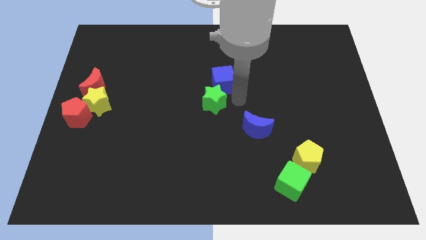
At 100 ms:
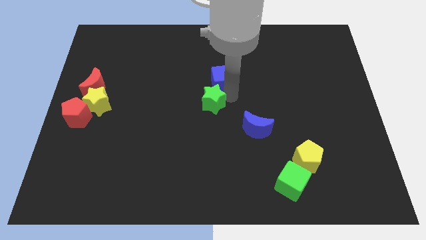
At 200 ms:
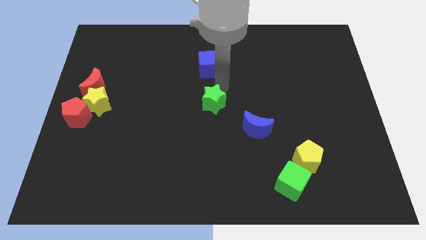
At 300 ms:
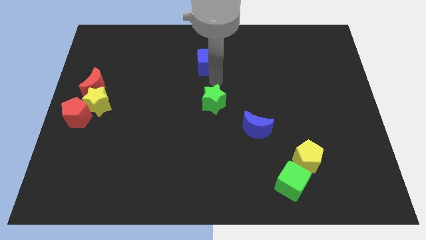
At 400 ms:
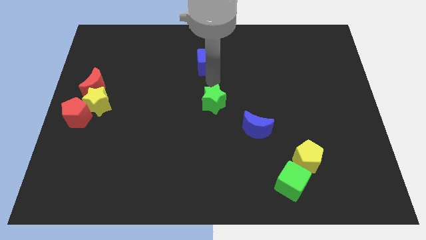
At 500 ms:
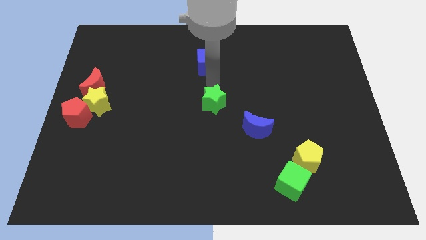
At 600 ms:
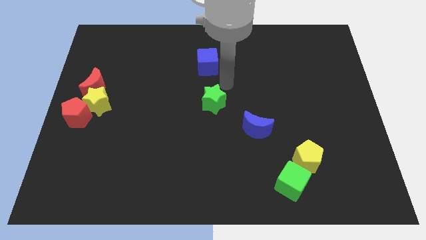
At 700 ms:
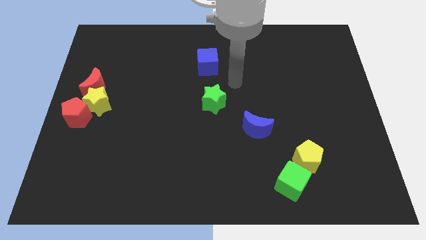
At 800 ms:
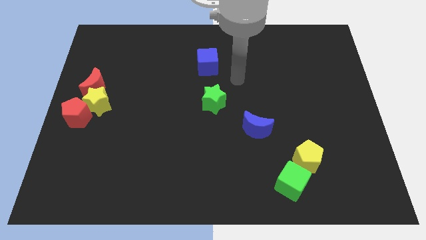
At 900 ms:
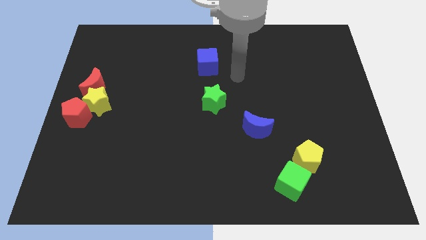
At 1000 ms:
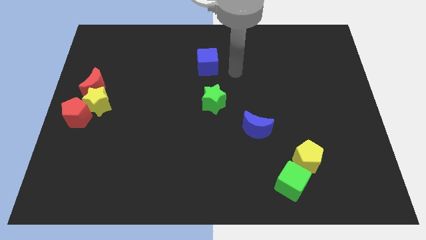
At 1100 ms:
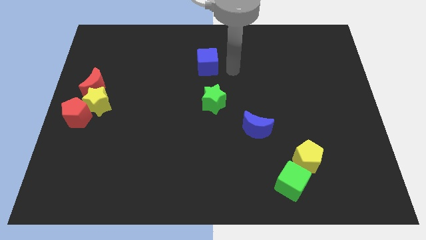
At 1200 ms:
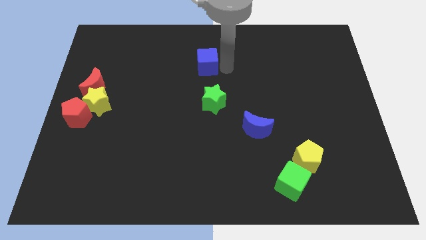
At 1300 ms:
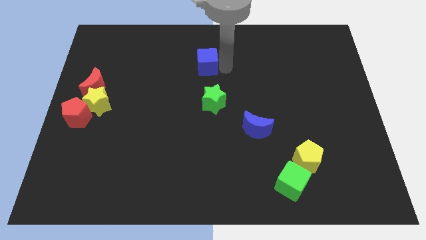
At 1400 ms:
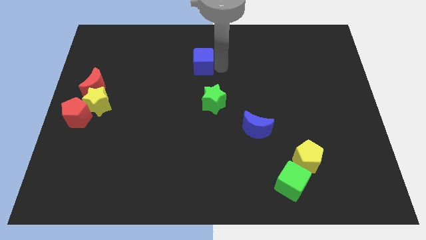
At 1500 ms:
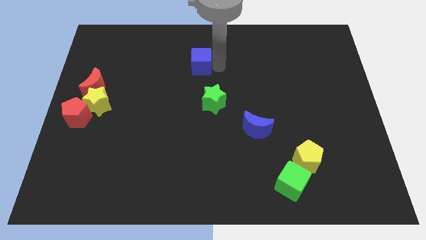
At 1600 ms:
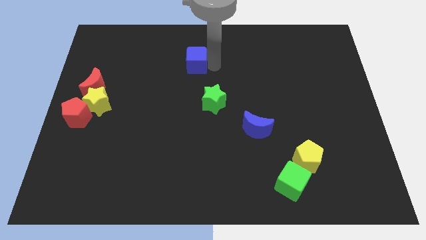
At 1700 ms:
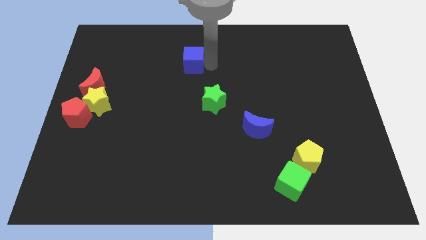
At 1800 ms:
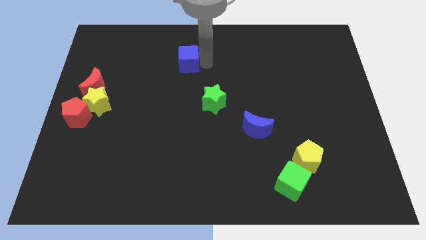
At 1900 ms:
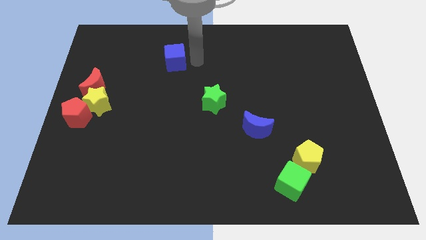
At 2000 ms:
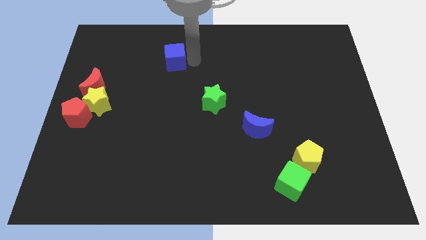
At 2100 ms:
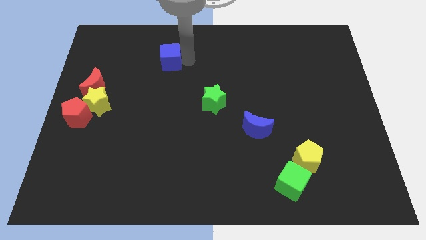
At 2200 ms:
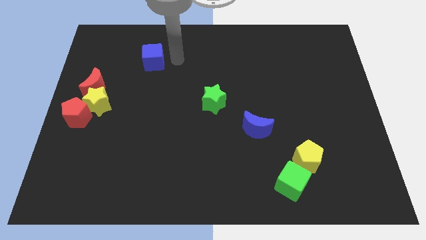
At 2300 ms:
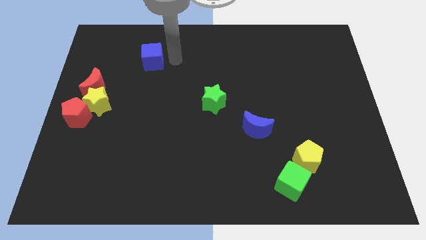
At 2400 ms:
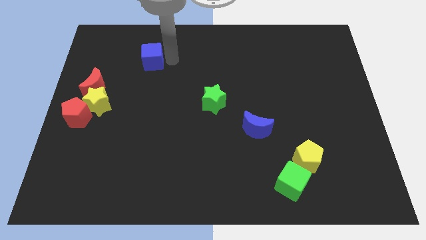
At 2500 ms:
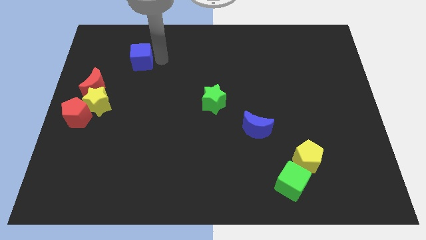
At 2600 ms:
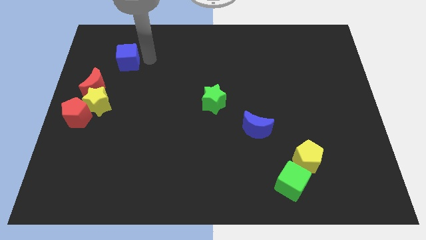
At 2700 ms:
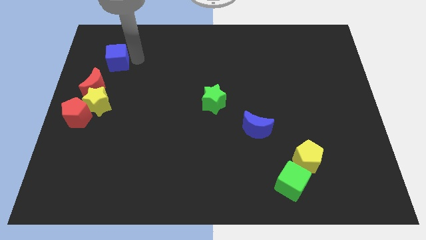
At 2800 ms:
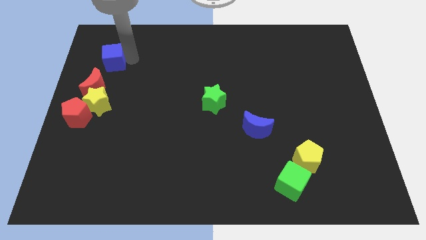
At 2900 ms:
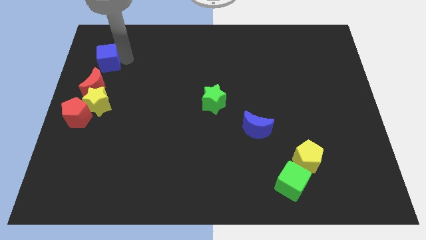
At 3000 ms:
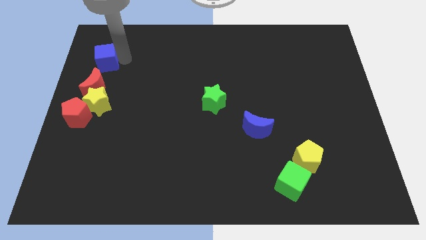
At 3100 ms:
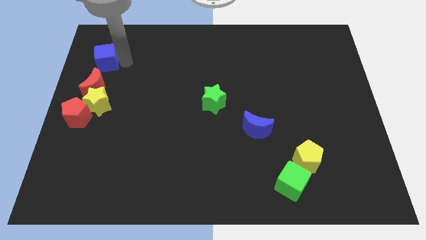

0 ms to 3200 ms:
push the blue cube to the top of the red crescent

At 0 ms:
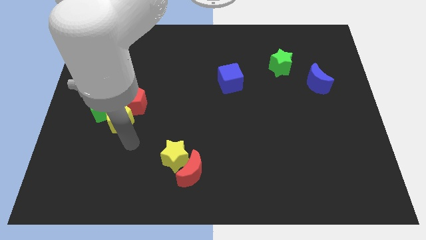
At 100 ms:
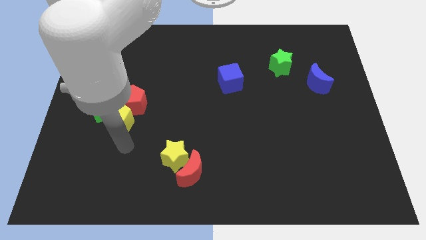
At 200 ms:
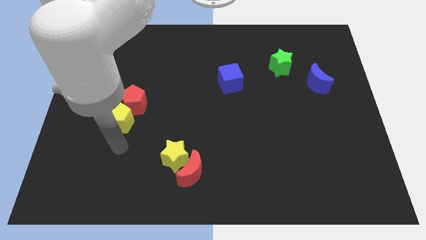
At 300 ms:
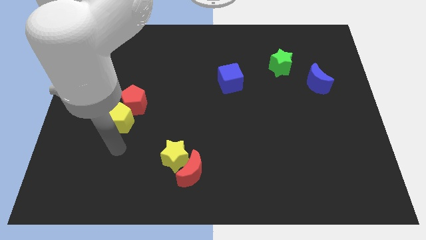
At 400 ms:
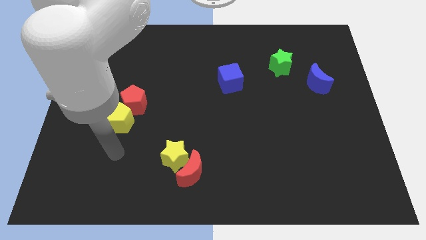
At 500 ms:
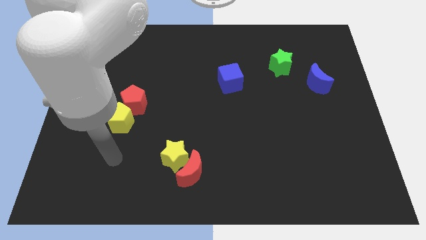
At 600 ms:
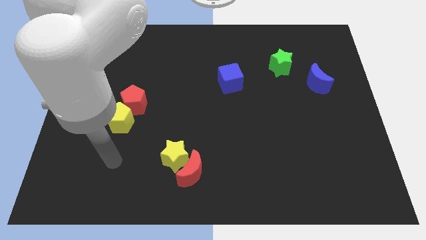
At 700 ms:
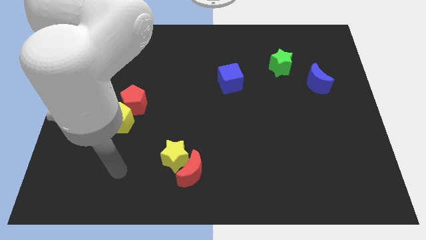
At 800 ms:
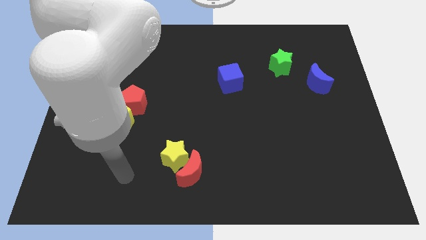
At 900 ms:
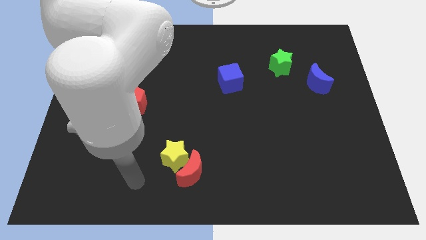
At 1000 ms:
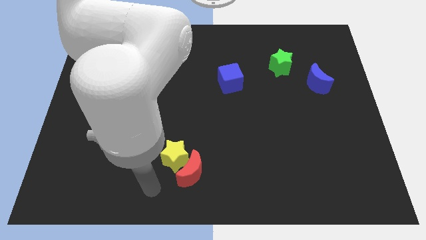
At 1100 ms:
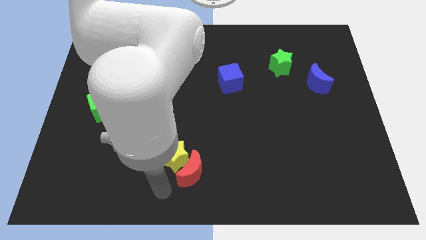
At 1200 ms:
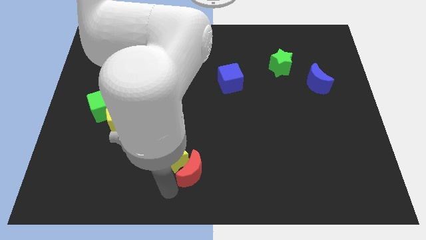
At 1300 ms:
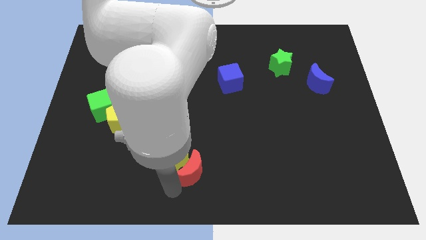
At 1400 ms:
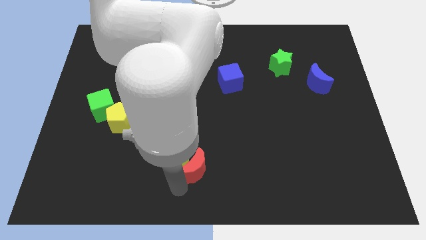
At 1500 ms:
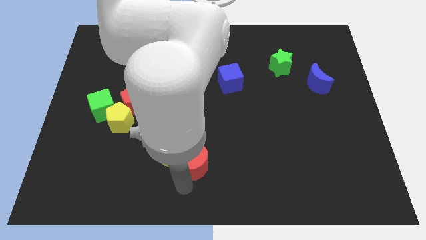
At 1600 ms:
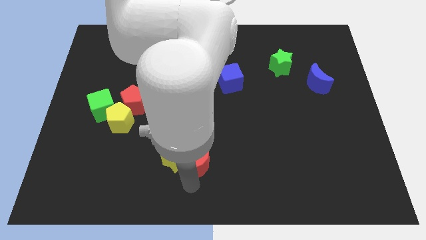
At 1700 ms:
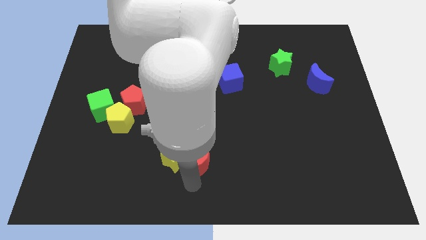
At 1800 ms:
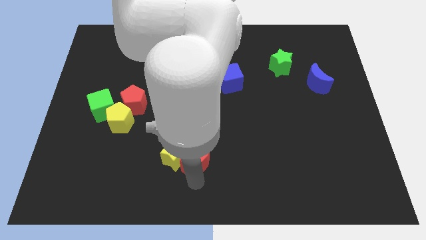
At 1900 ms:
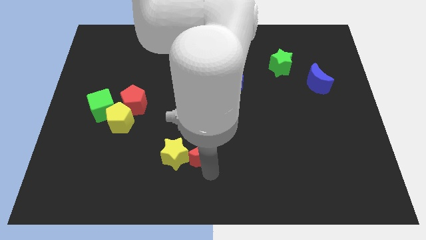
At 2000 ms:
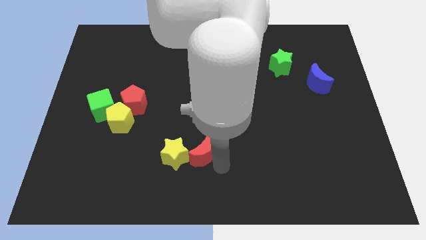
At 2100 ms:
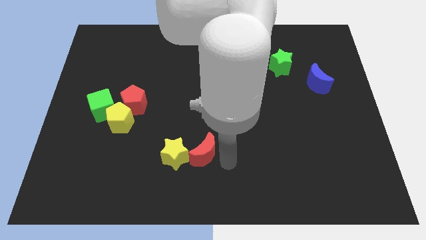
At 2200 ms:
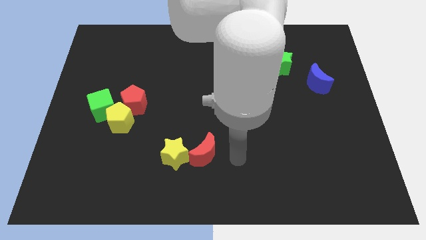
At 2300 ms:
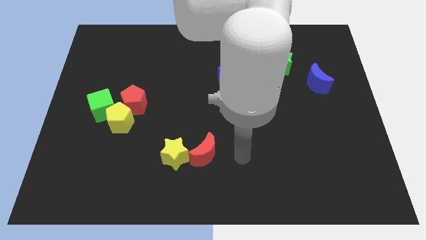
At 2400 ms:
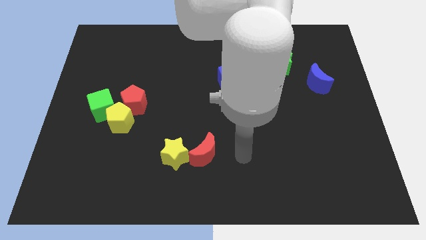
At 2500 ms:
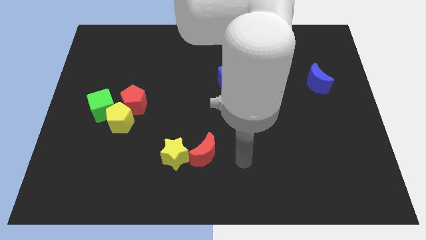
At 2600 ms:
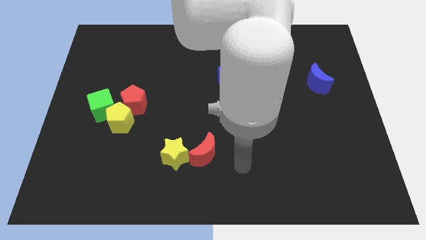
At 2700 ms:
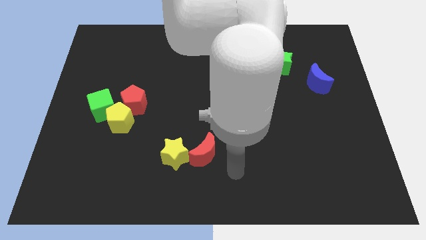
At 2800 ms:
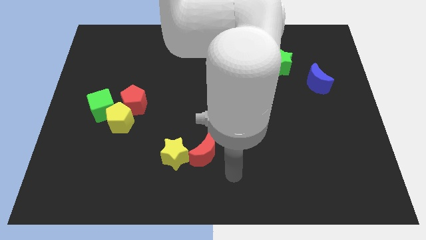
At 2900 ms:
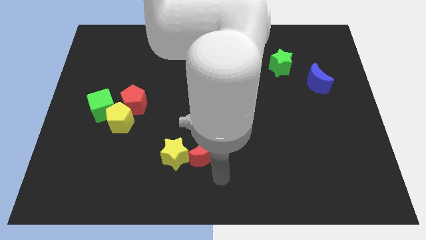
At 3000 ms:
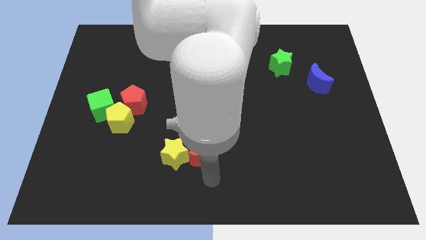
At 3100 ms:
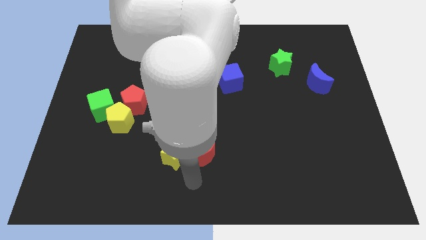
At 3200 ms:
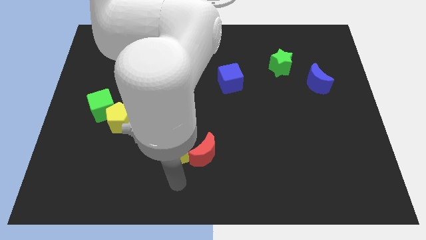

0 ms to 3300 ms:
move the red crescent right to the yellow star

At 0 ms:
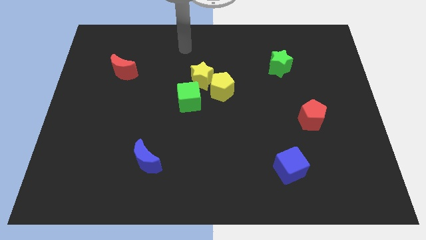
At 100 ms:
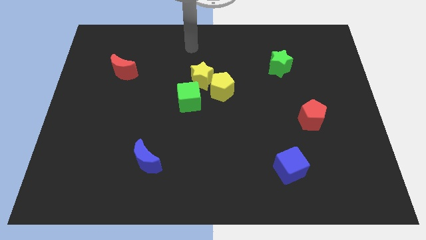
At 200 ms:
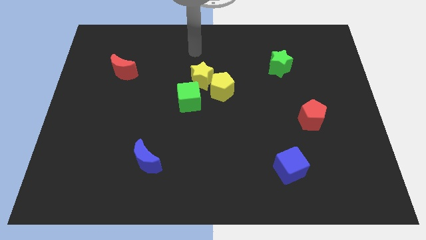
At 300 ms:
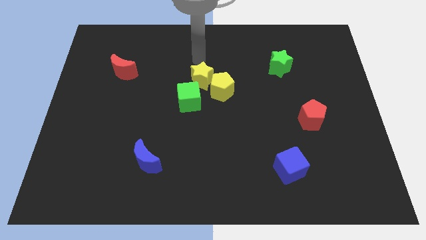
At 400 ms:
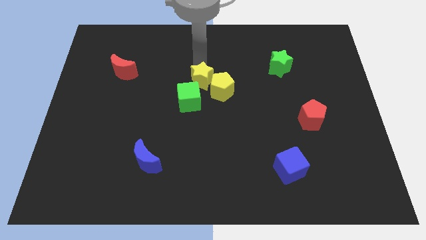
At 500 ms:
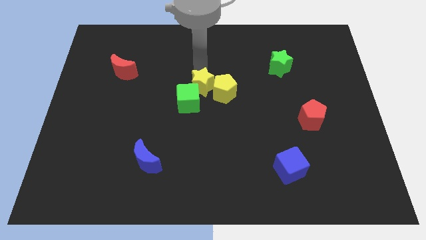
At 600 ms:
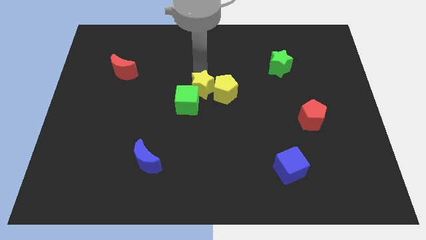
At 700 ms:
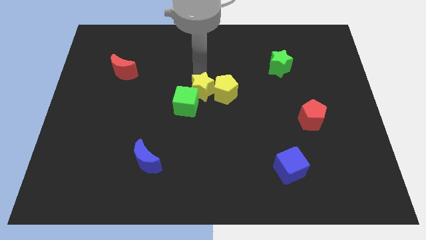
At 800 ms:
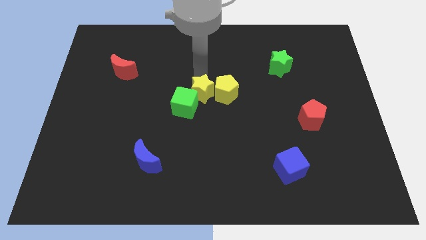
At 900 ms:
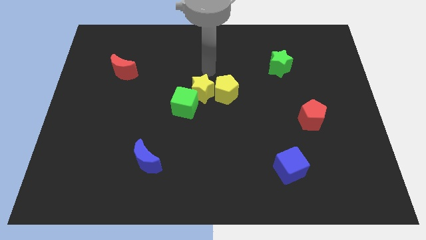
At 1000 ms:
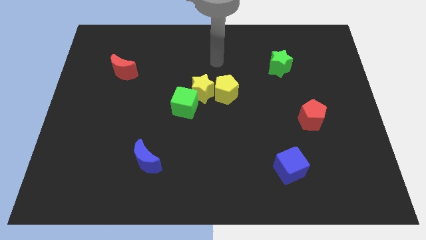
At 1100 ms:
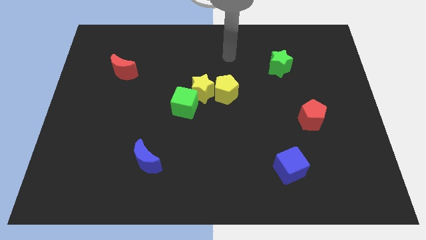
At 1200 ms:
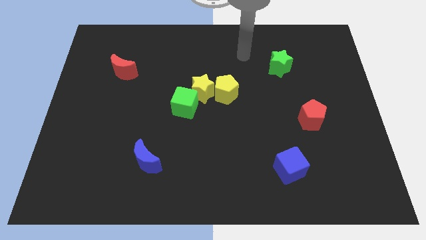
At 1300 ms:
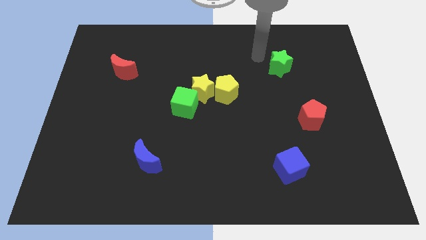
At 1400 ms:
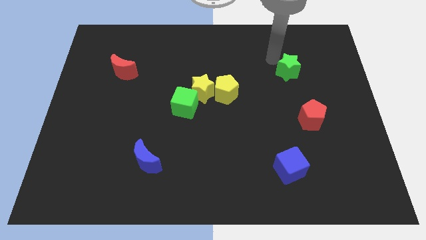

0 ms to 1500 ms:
touch the top of yellow and green star

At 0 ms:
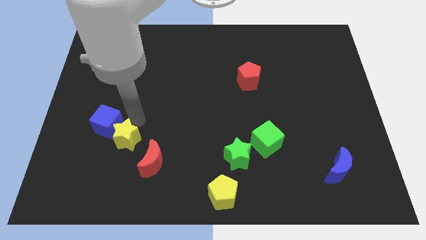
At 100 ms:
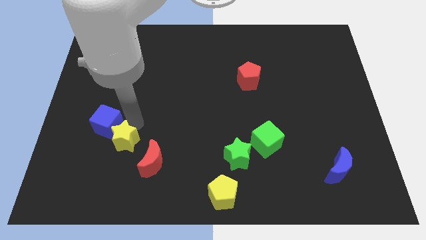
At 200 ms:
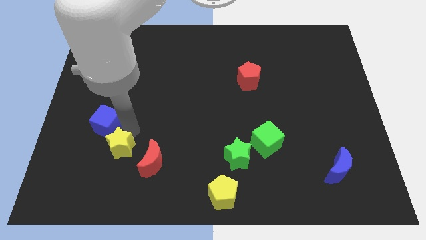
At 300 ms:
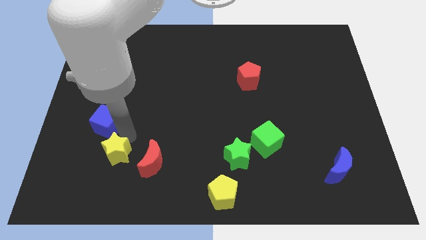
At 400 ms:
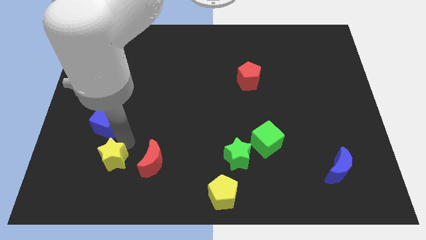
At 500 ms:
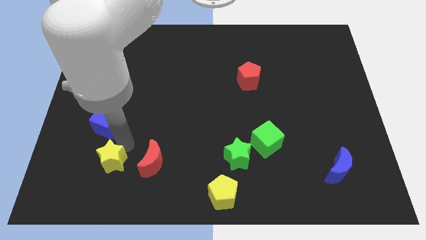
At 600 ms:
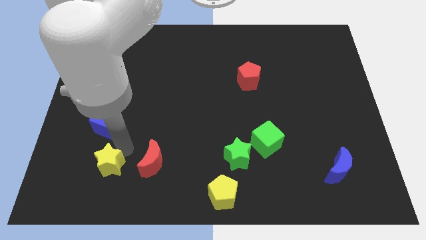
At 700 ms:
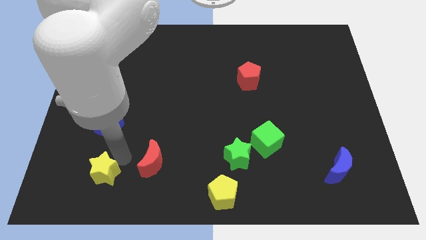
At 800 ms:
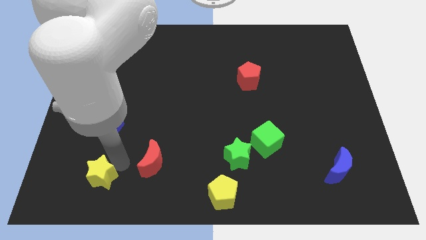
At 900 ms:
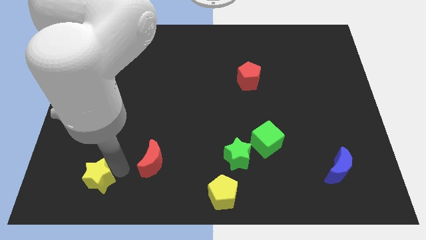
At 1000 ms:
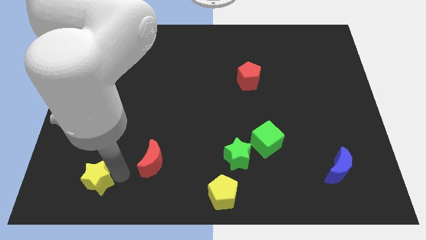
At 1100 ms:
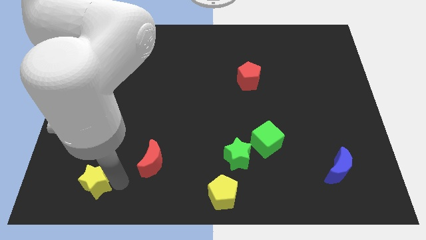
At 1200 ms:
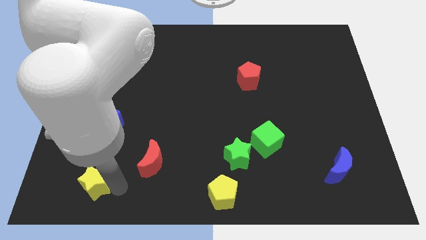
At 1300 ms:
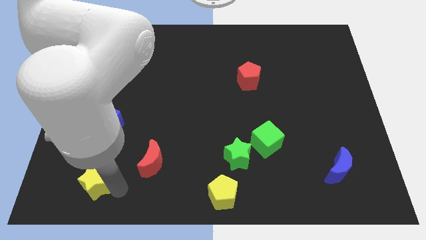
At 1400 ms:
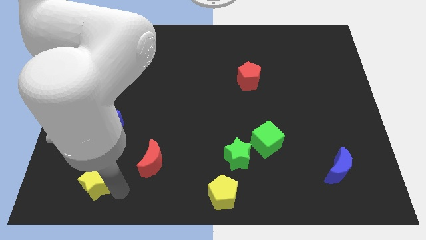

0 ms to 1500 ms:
separate yellow star from blue cube
